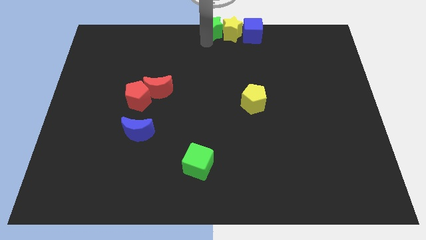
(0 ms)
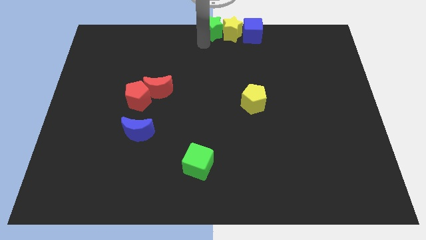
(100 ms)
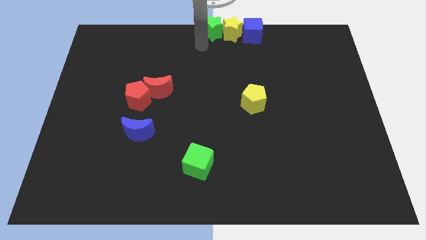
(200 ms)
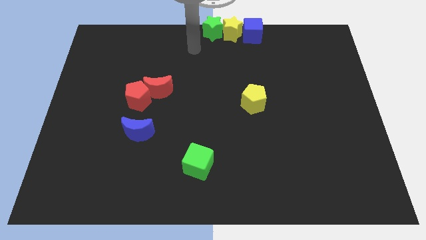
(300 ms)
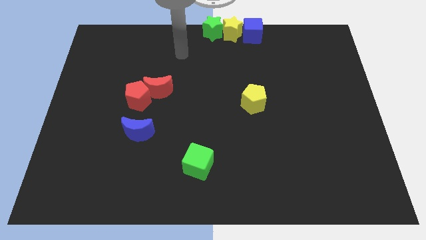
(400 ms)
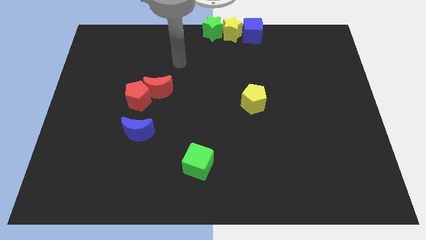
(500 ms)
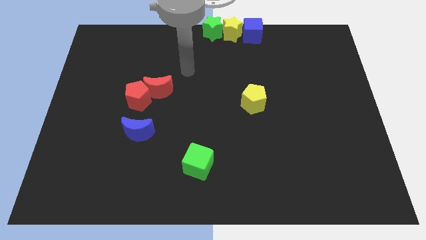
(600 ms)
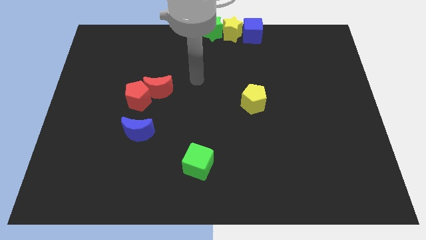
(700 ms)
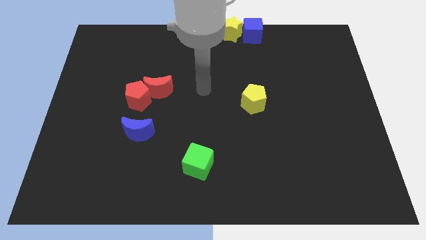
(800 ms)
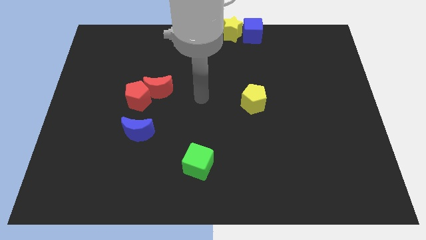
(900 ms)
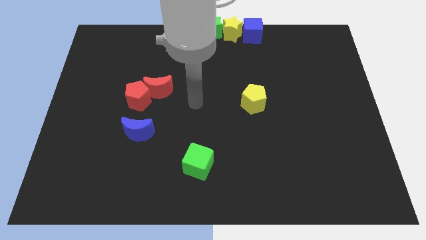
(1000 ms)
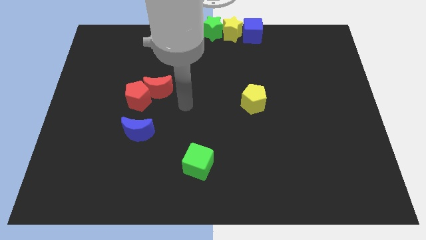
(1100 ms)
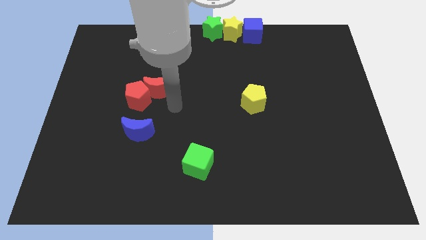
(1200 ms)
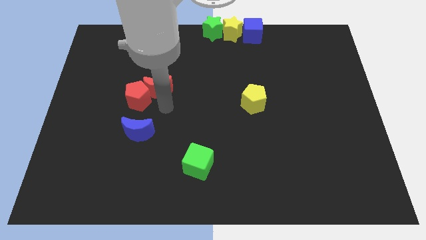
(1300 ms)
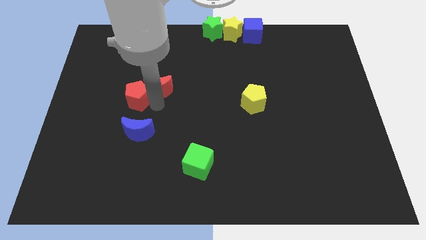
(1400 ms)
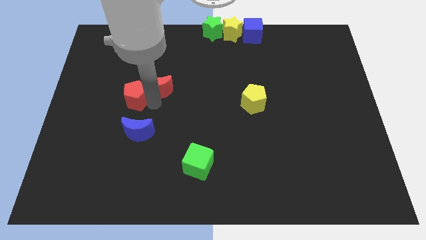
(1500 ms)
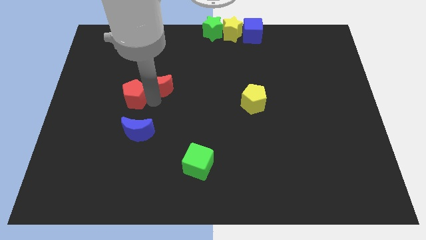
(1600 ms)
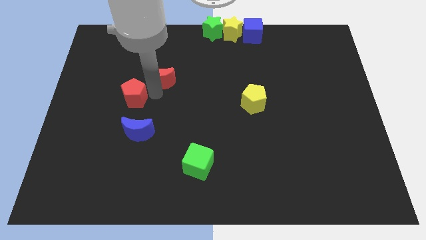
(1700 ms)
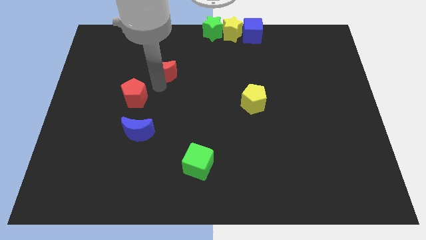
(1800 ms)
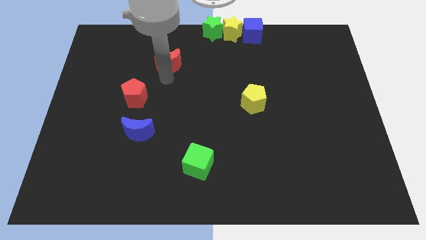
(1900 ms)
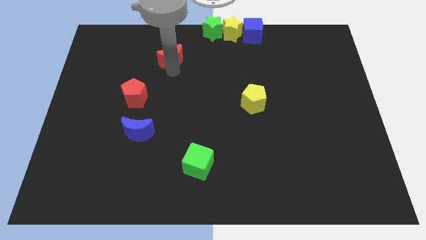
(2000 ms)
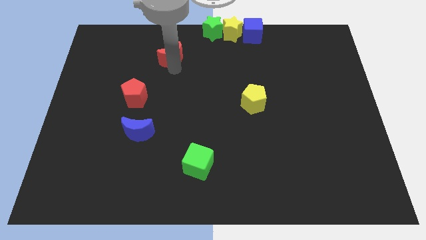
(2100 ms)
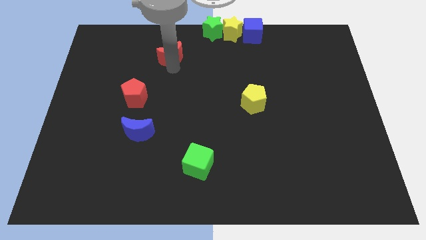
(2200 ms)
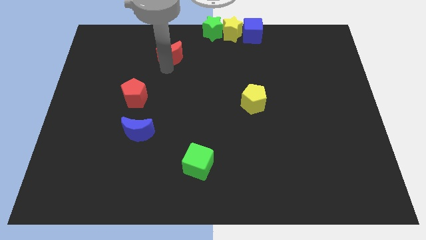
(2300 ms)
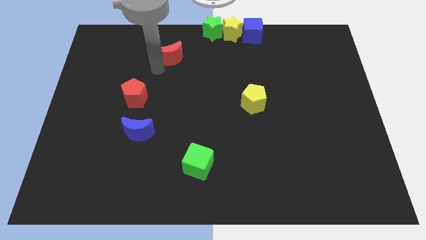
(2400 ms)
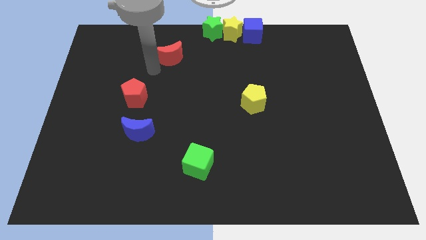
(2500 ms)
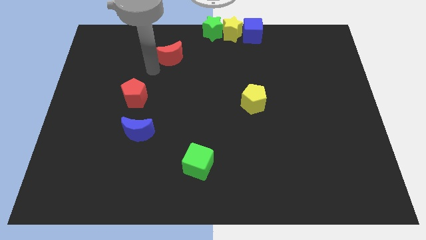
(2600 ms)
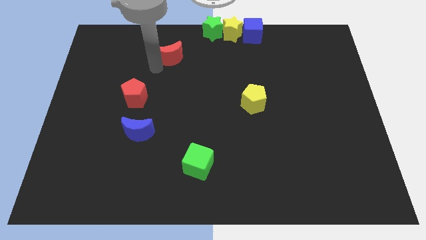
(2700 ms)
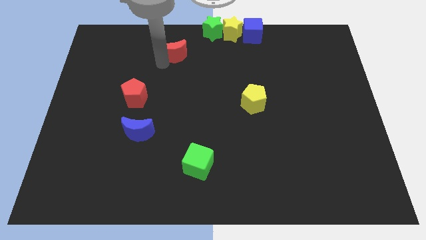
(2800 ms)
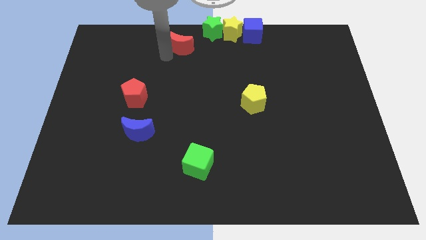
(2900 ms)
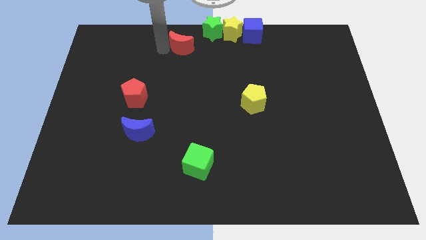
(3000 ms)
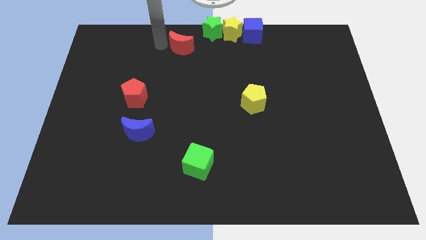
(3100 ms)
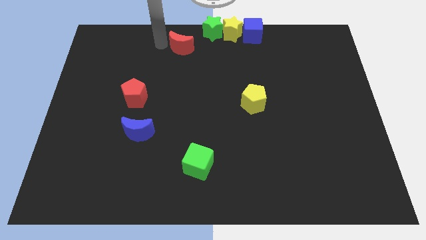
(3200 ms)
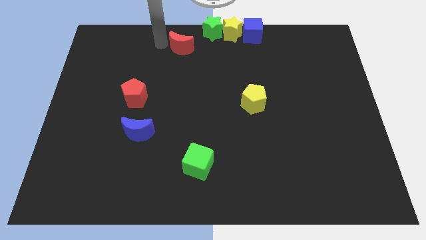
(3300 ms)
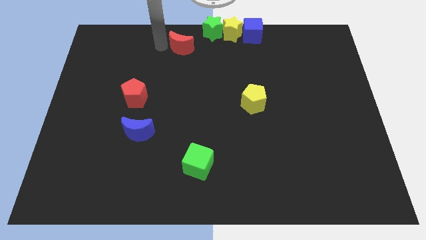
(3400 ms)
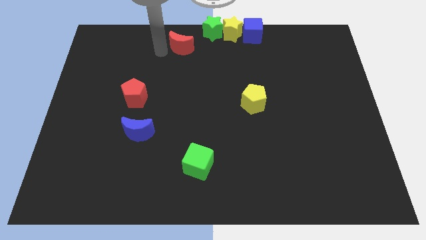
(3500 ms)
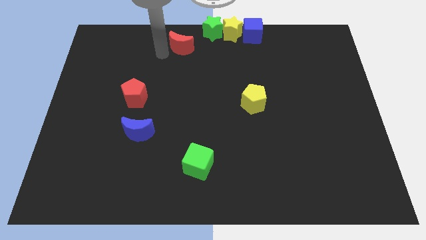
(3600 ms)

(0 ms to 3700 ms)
separate the red blocks

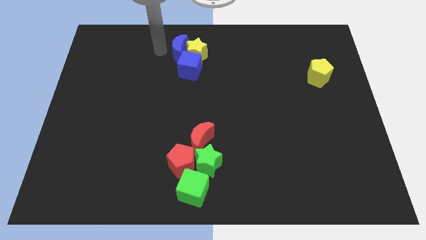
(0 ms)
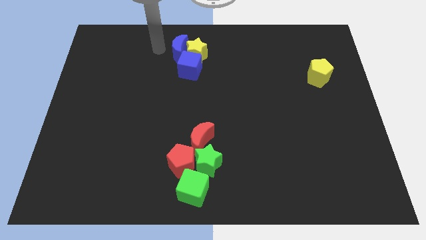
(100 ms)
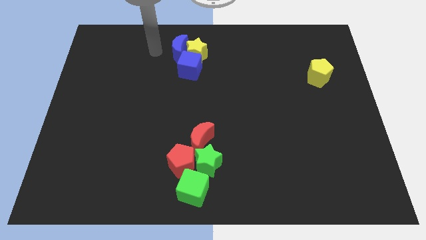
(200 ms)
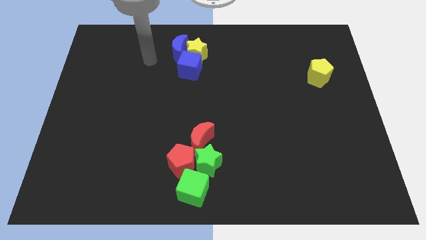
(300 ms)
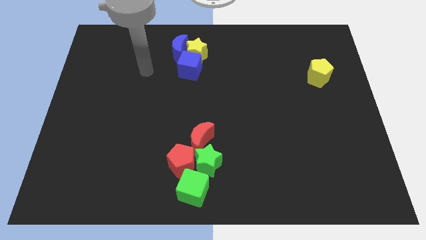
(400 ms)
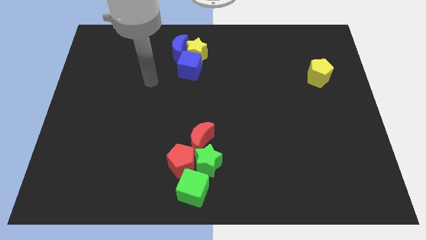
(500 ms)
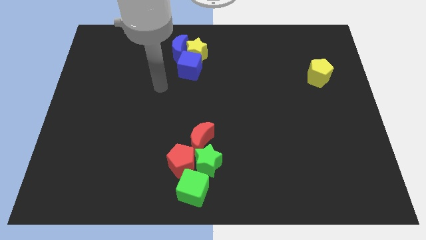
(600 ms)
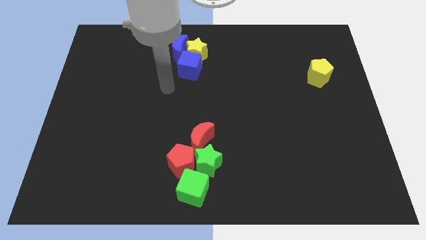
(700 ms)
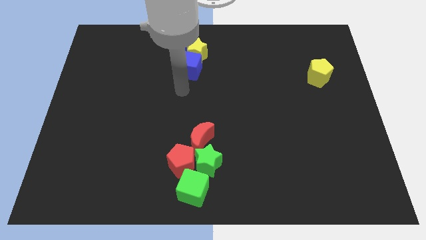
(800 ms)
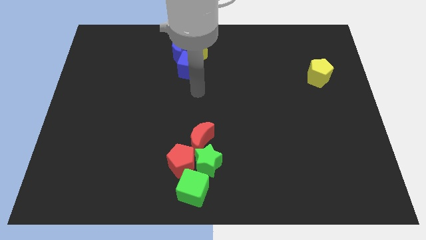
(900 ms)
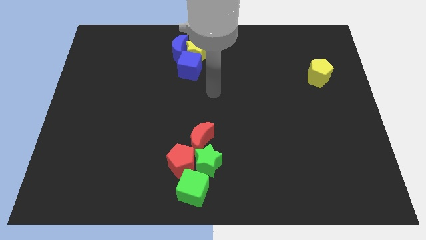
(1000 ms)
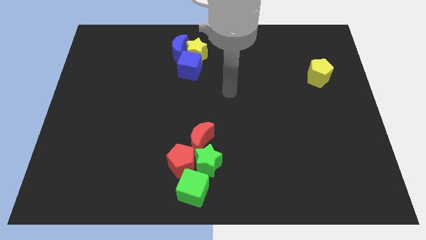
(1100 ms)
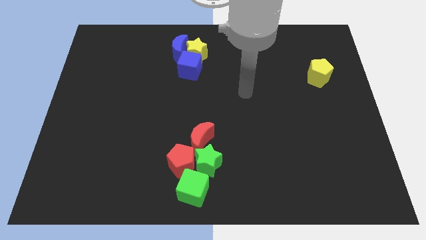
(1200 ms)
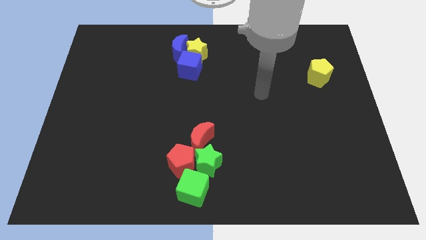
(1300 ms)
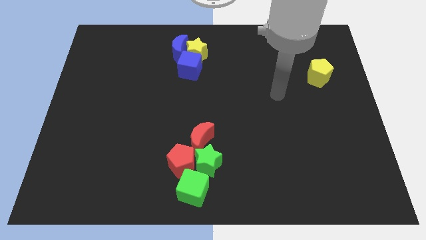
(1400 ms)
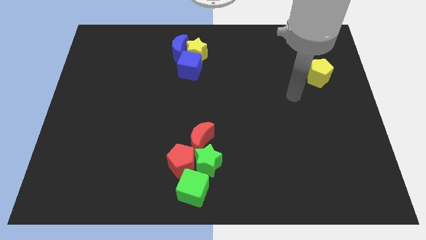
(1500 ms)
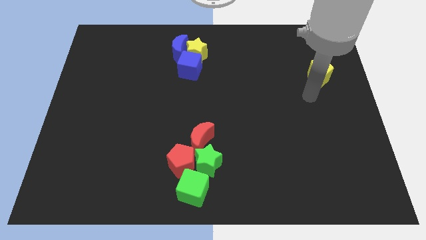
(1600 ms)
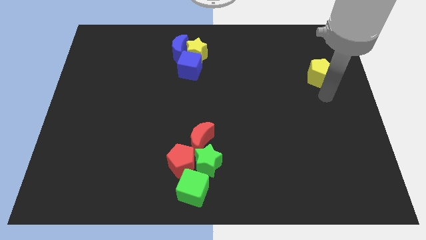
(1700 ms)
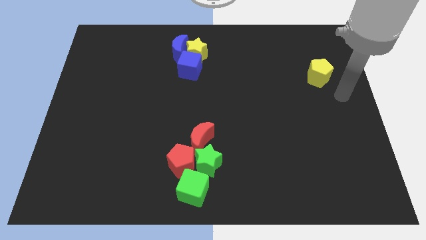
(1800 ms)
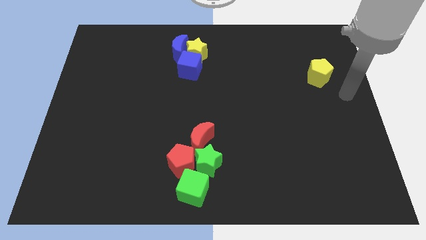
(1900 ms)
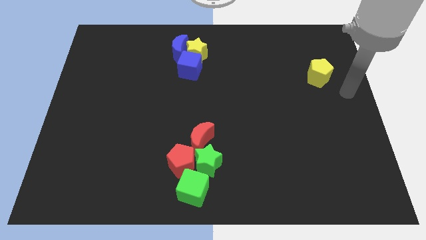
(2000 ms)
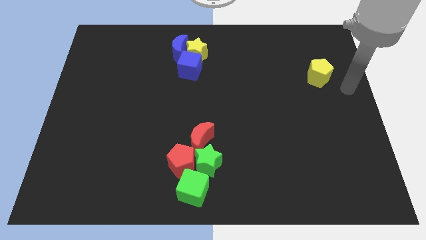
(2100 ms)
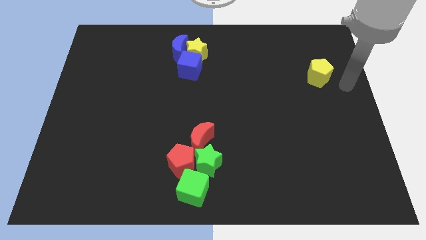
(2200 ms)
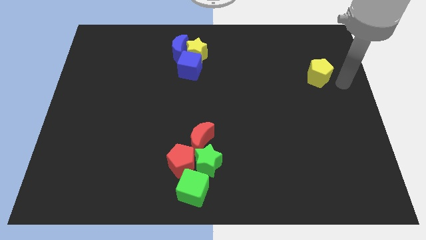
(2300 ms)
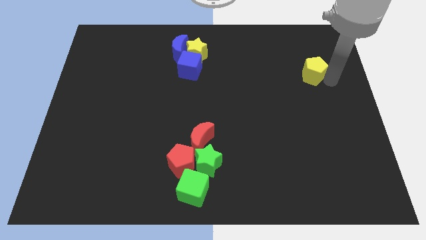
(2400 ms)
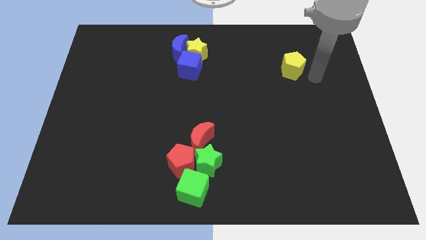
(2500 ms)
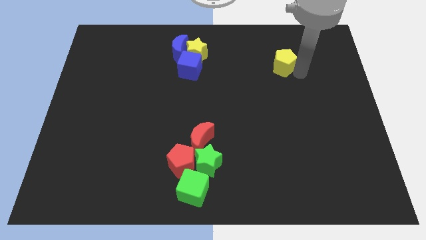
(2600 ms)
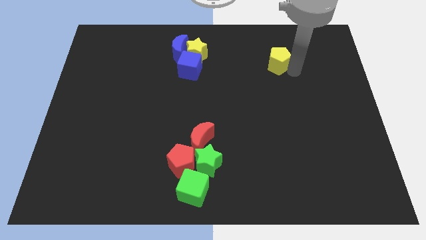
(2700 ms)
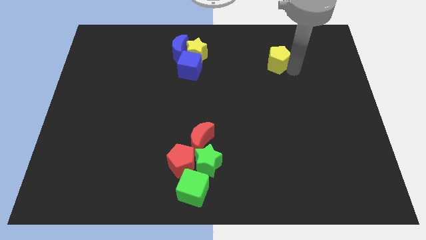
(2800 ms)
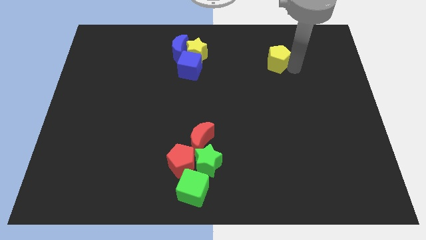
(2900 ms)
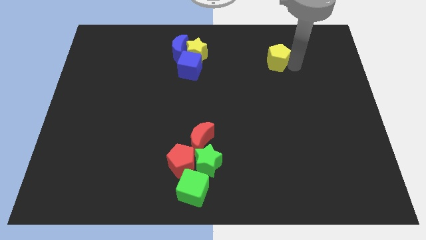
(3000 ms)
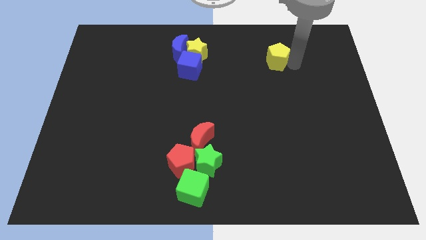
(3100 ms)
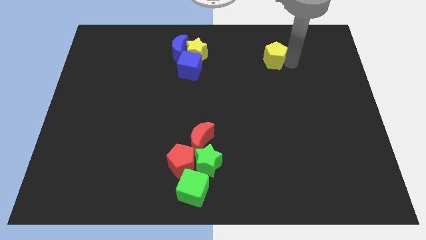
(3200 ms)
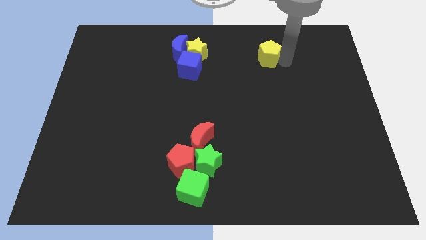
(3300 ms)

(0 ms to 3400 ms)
push the yellow pentagon towards the top center of the board

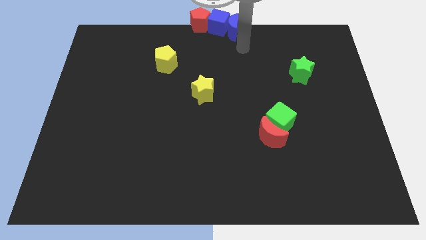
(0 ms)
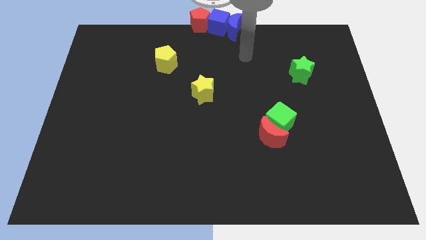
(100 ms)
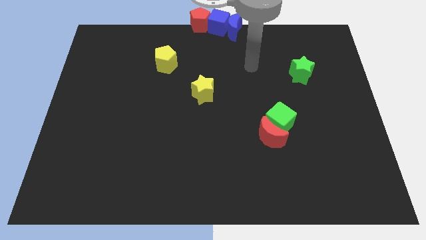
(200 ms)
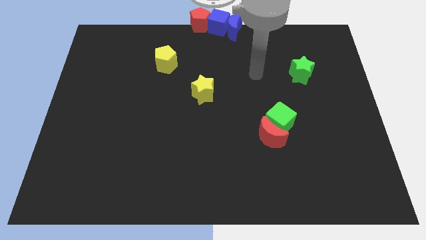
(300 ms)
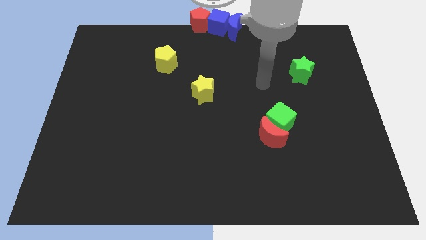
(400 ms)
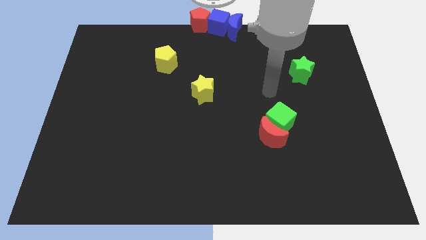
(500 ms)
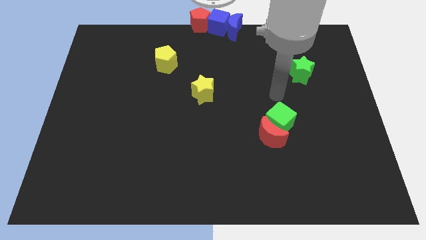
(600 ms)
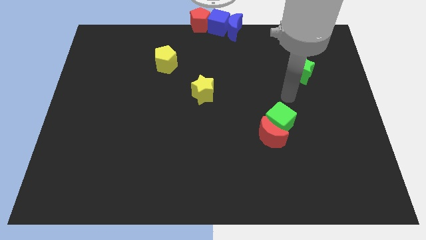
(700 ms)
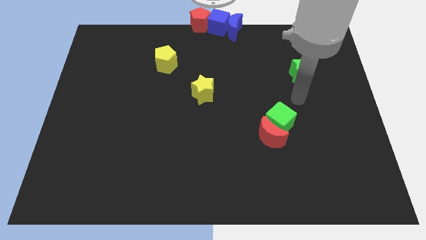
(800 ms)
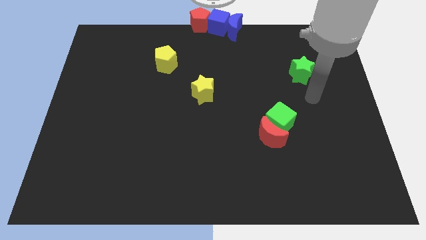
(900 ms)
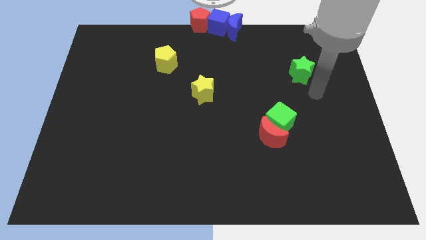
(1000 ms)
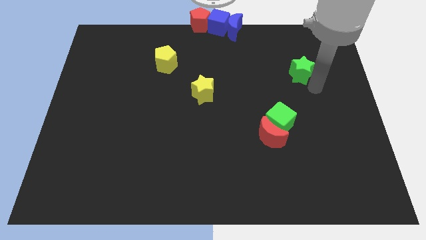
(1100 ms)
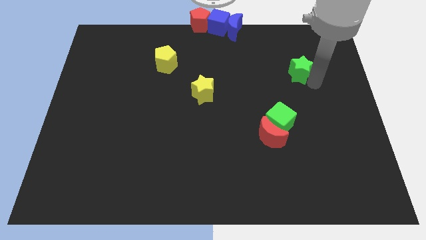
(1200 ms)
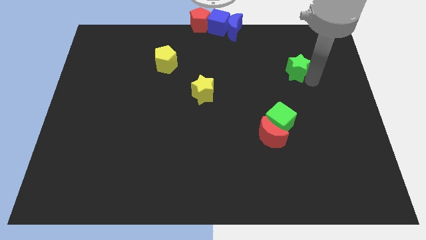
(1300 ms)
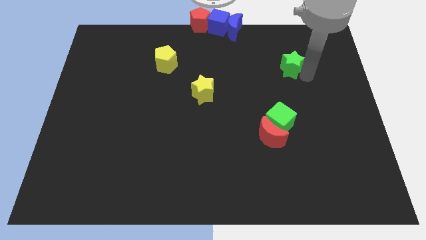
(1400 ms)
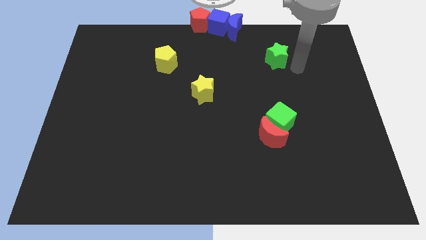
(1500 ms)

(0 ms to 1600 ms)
move the green star to the top of the green cube

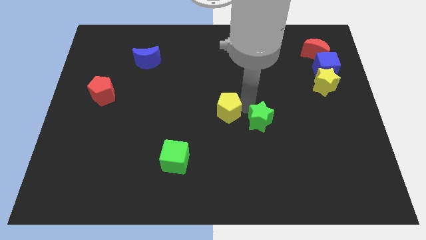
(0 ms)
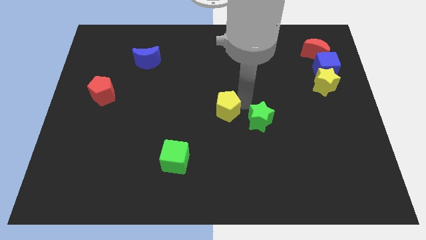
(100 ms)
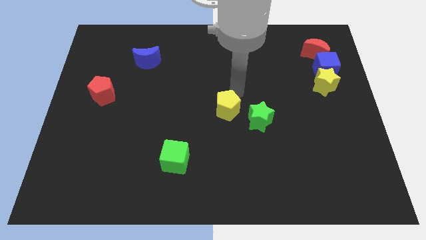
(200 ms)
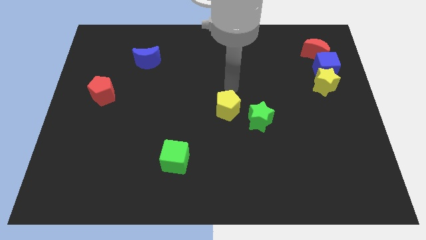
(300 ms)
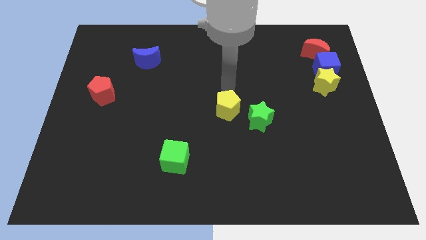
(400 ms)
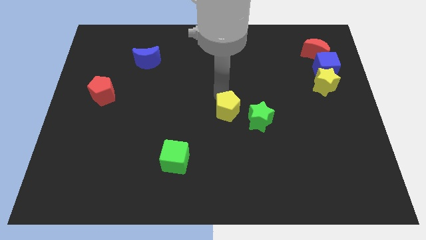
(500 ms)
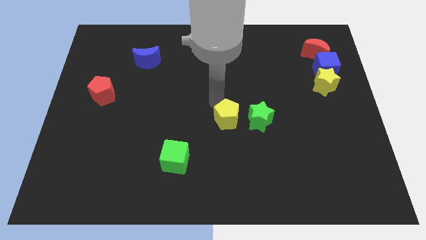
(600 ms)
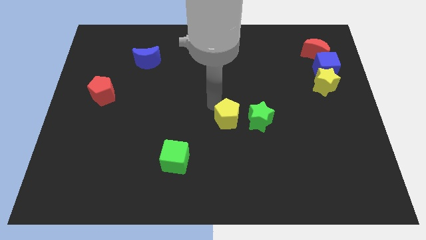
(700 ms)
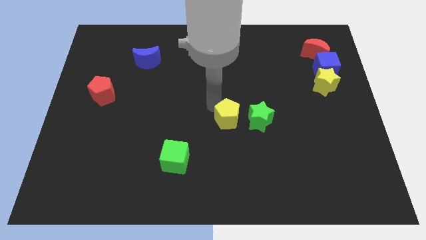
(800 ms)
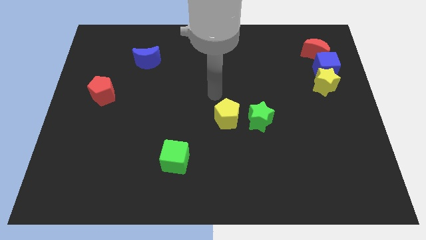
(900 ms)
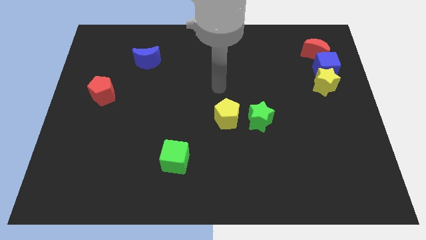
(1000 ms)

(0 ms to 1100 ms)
slide yellow pentagon slightly to the down
